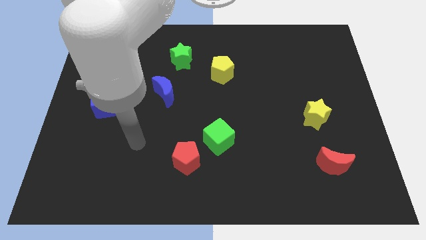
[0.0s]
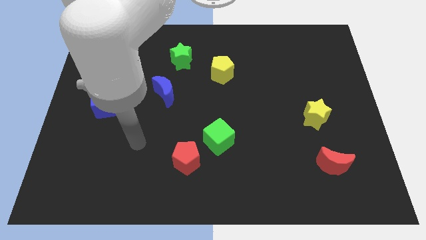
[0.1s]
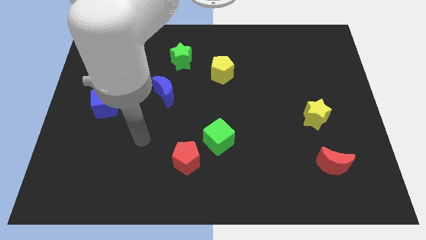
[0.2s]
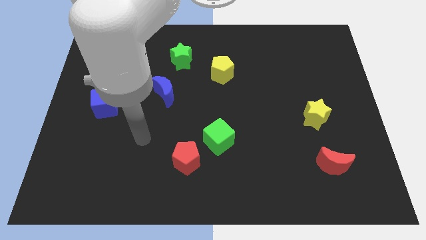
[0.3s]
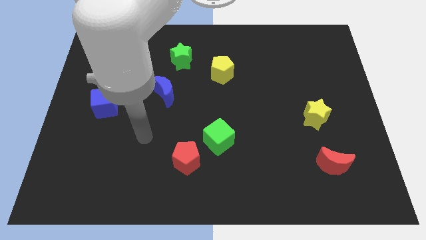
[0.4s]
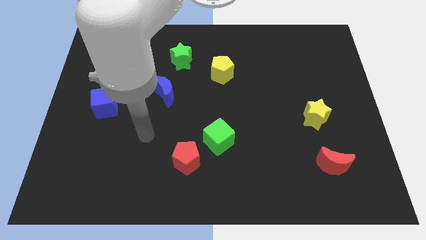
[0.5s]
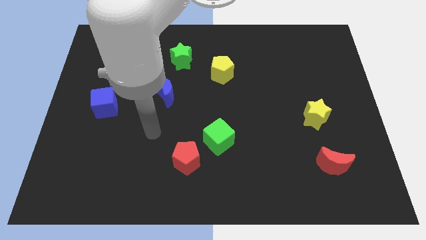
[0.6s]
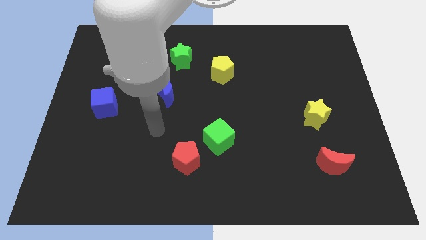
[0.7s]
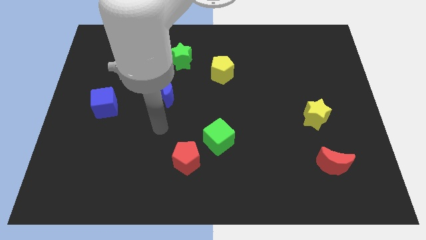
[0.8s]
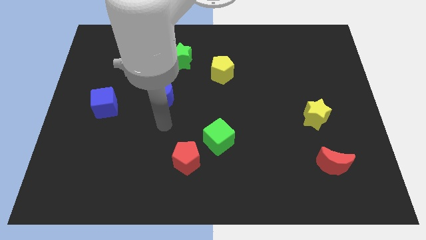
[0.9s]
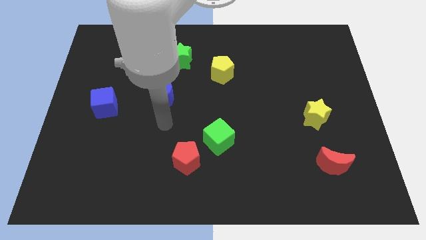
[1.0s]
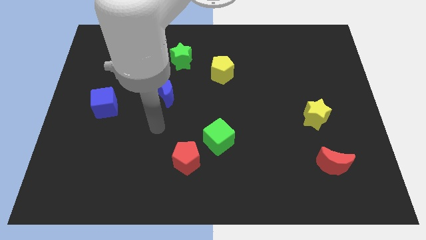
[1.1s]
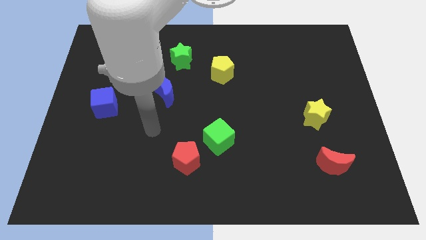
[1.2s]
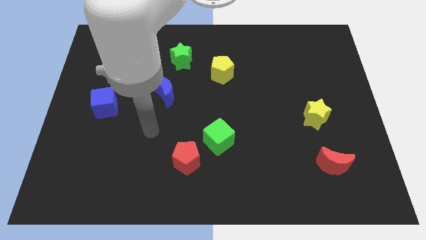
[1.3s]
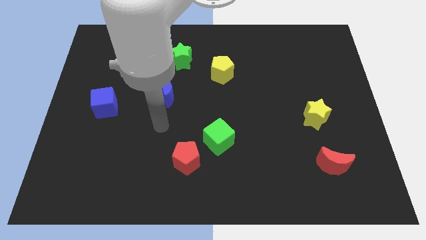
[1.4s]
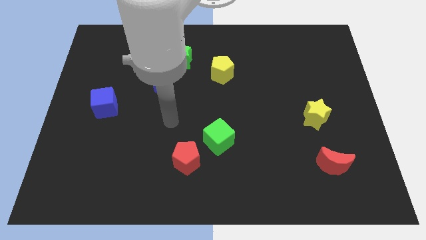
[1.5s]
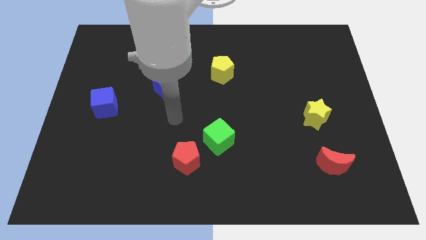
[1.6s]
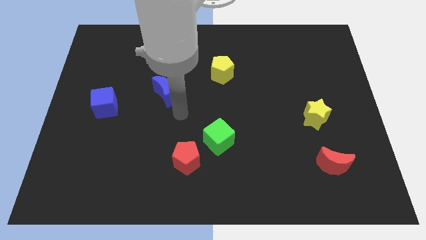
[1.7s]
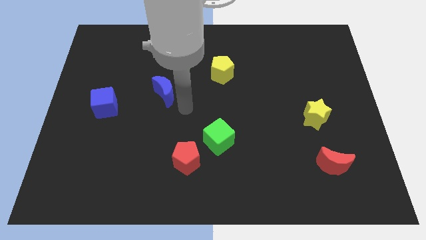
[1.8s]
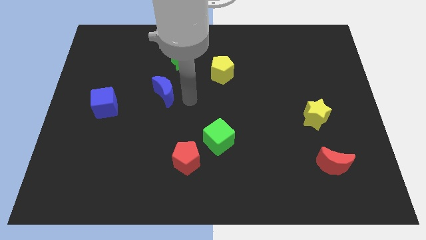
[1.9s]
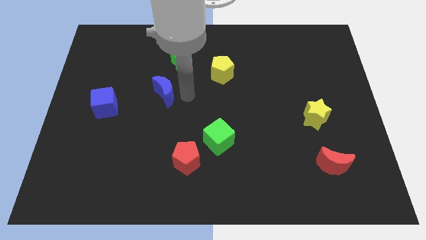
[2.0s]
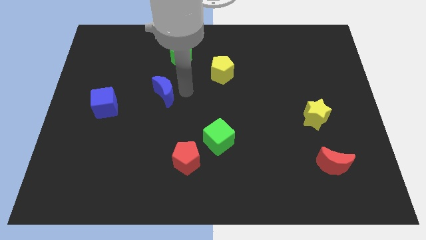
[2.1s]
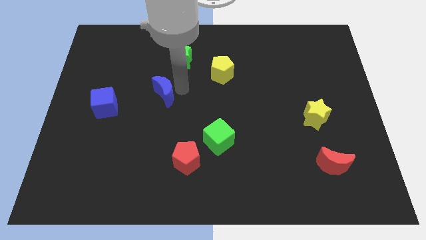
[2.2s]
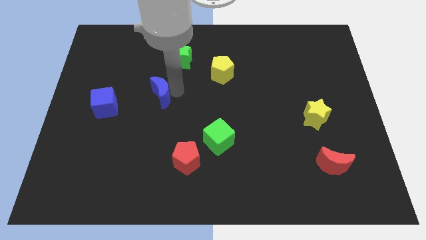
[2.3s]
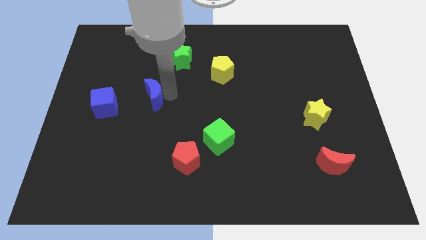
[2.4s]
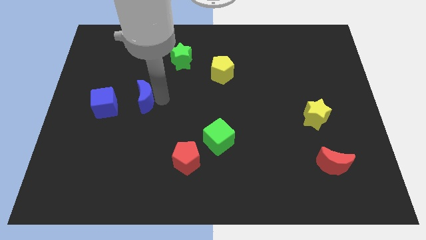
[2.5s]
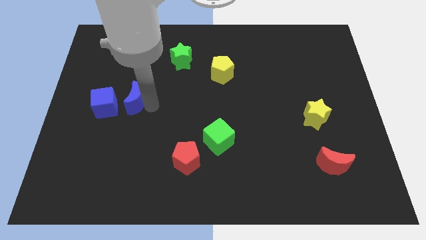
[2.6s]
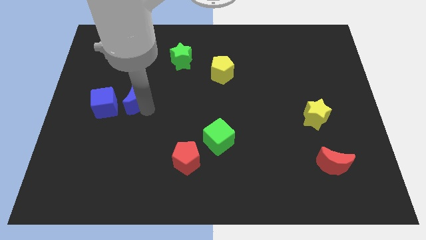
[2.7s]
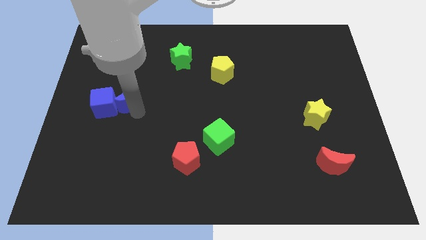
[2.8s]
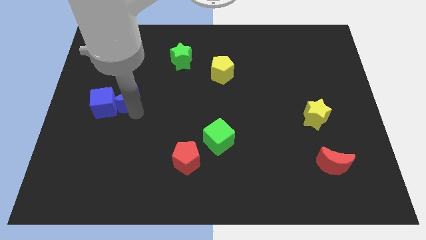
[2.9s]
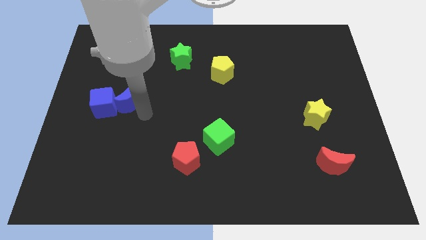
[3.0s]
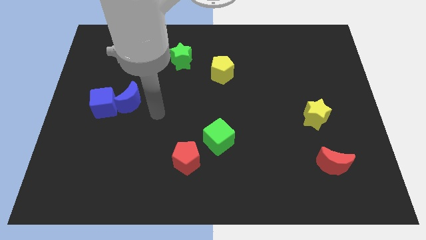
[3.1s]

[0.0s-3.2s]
push the blue crescent into the blue cube

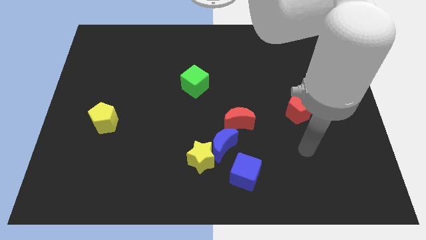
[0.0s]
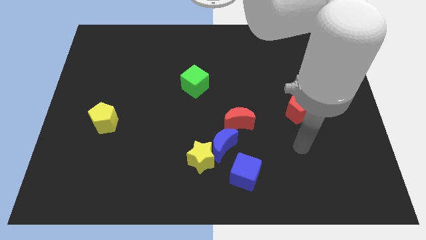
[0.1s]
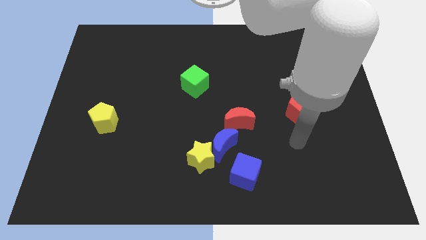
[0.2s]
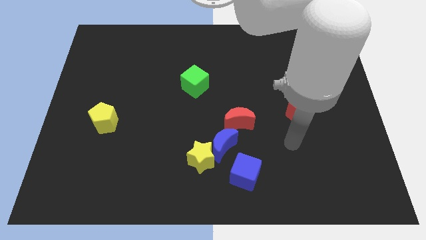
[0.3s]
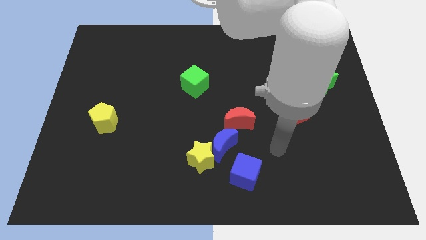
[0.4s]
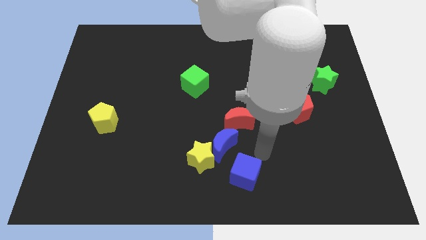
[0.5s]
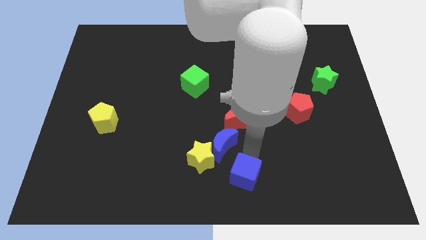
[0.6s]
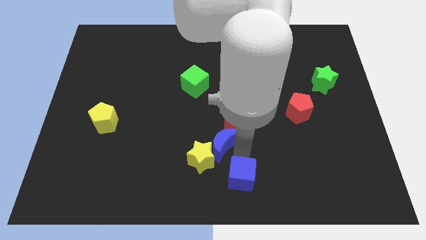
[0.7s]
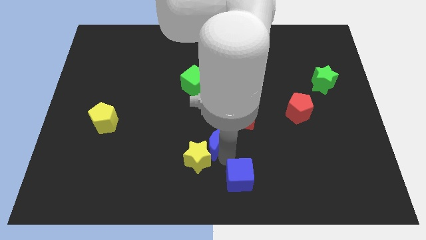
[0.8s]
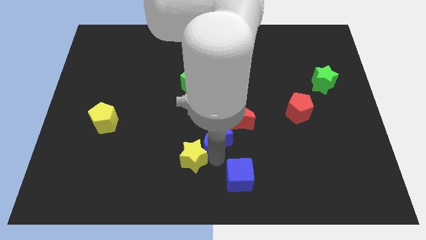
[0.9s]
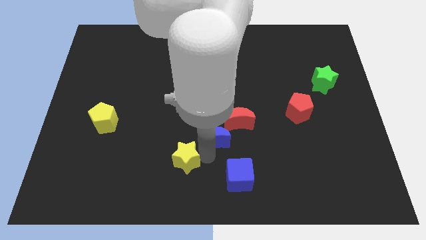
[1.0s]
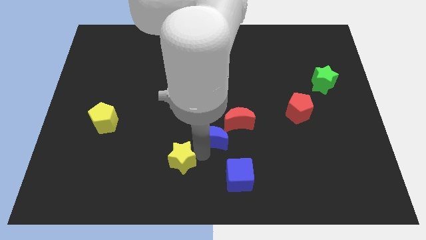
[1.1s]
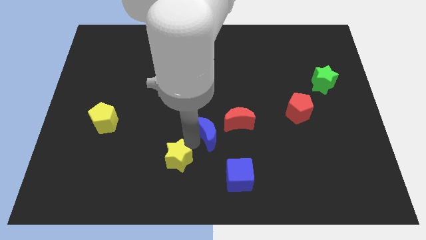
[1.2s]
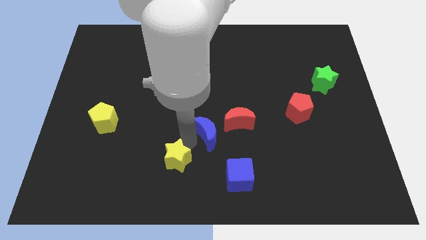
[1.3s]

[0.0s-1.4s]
separate the blue crescent and yellow star

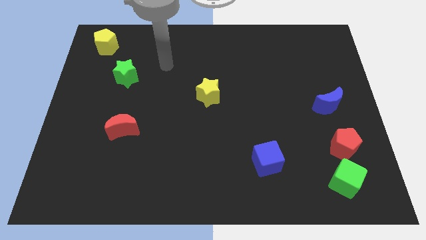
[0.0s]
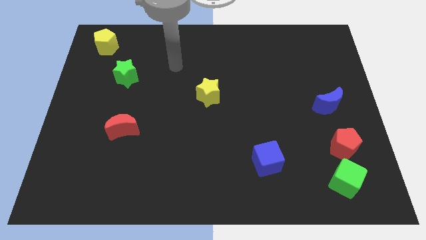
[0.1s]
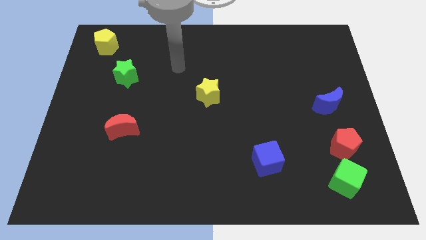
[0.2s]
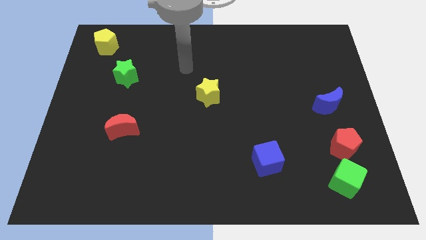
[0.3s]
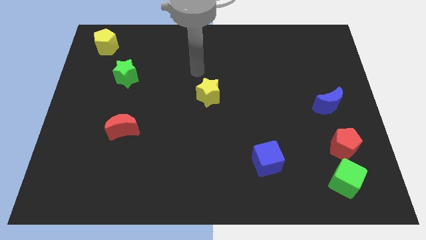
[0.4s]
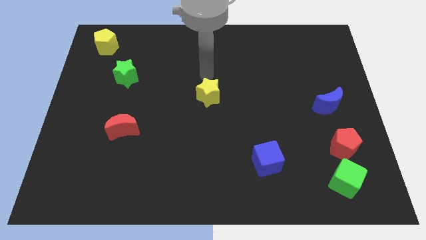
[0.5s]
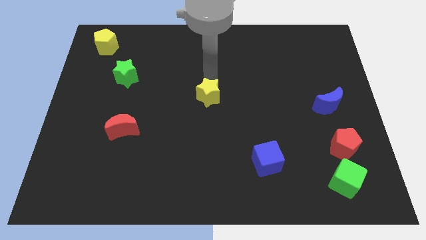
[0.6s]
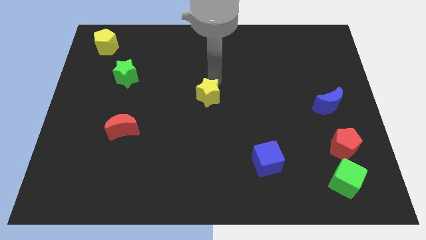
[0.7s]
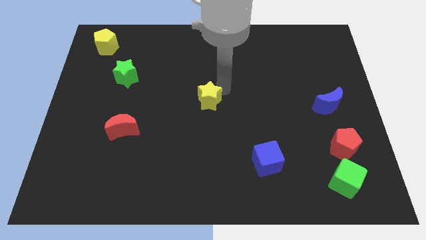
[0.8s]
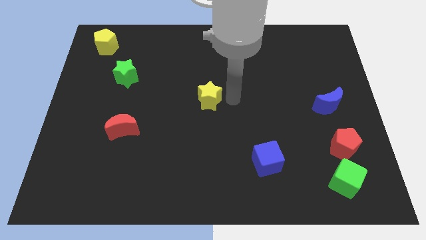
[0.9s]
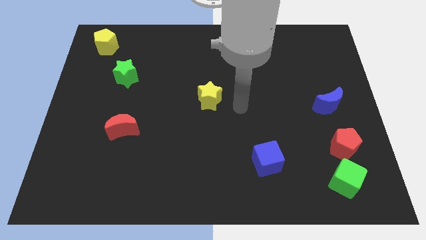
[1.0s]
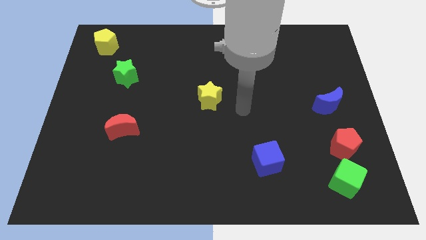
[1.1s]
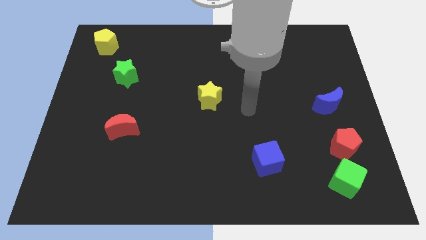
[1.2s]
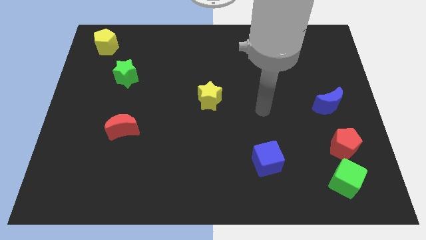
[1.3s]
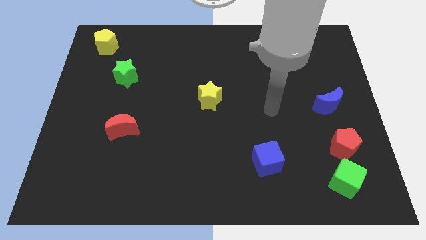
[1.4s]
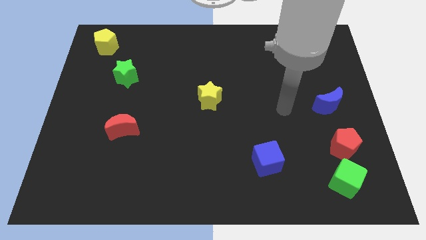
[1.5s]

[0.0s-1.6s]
slightly push the yellow star towards the center of the board

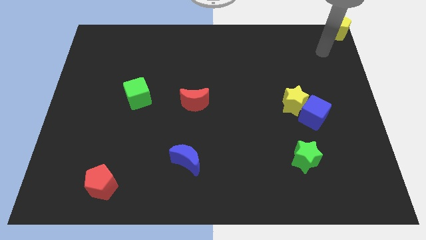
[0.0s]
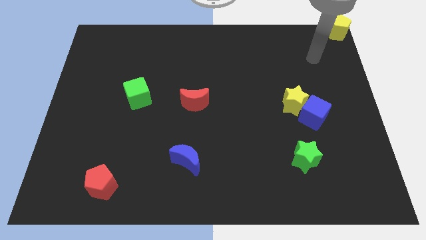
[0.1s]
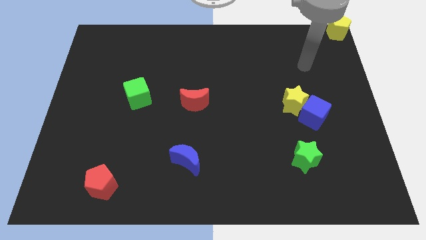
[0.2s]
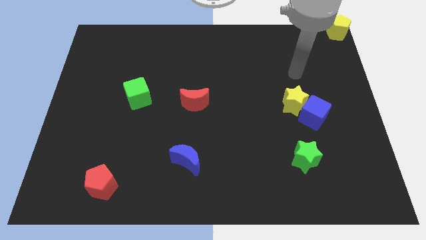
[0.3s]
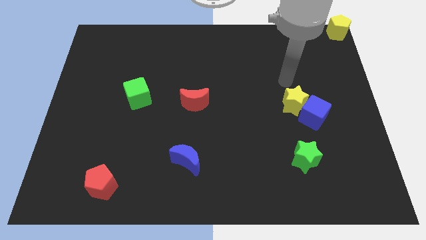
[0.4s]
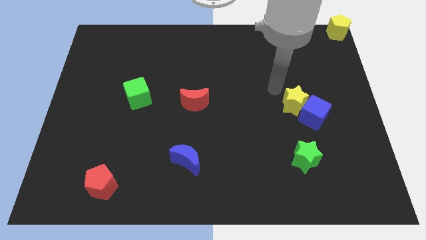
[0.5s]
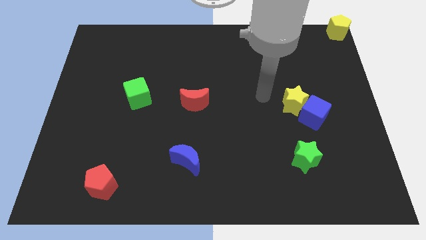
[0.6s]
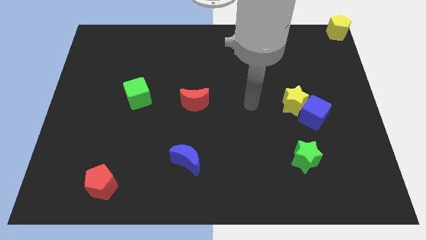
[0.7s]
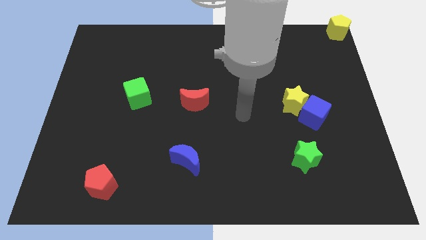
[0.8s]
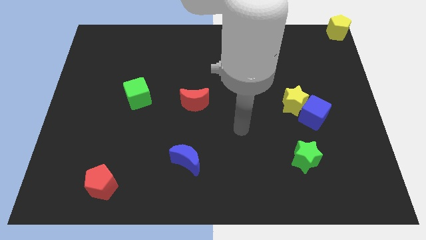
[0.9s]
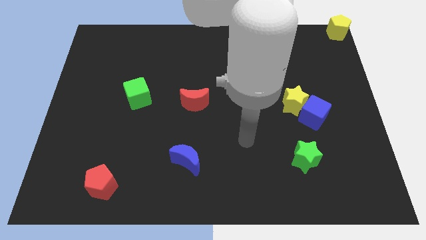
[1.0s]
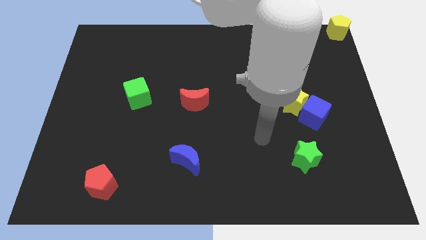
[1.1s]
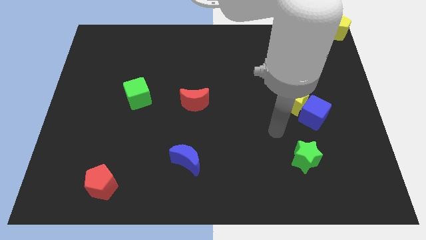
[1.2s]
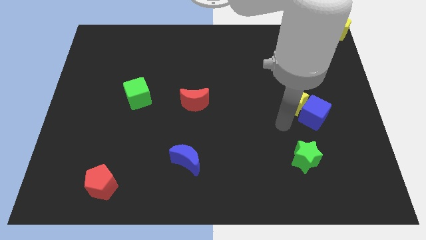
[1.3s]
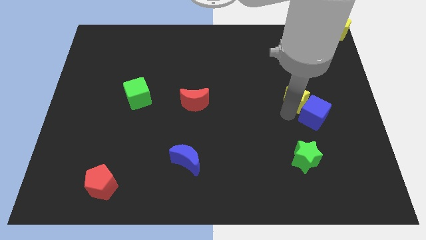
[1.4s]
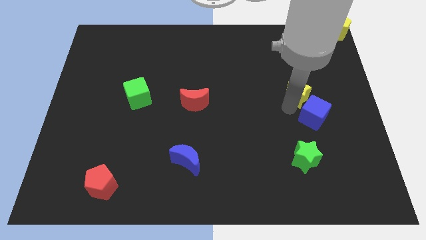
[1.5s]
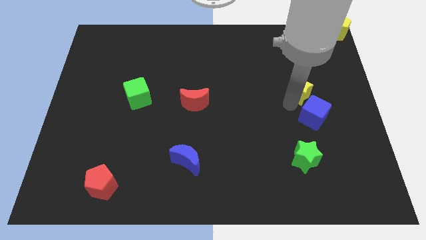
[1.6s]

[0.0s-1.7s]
move your arm to the bottom of the yellow star

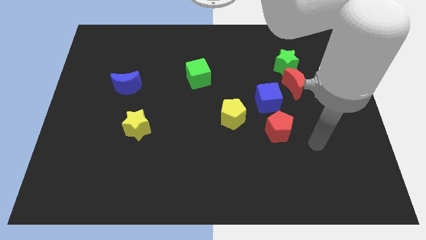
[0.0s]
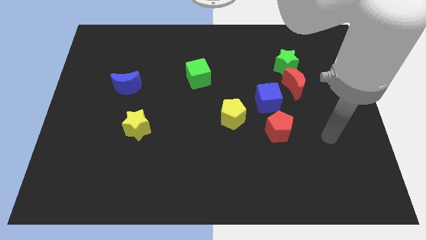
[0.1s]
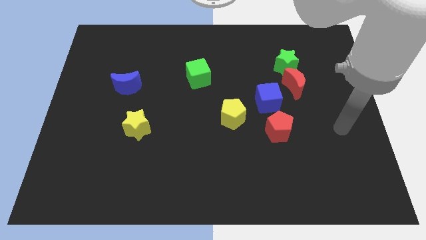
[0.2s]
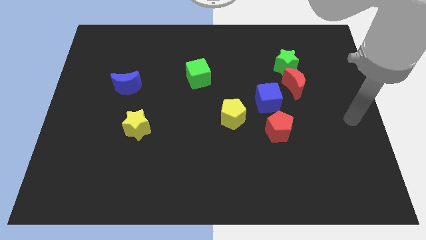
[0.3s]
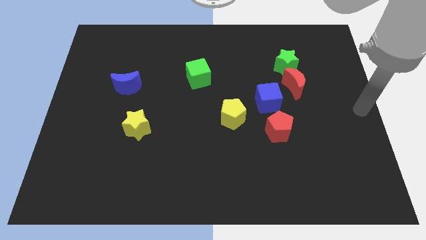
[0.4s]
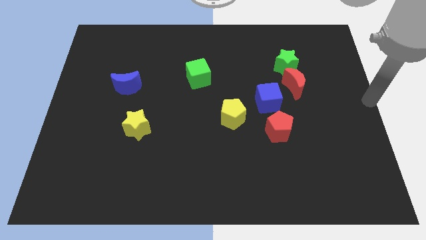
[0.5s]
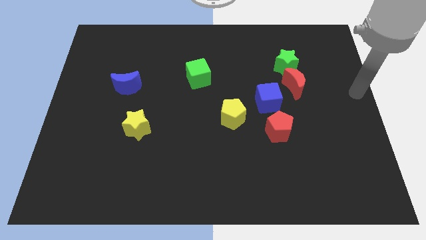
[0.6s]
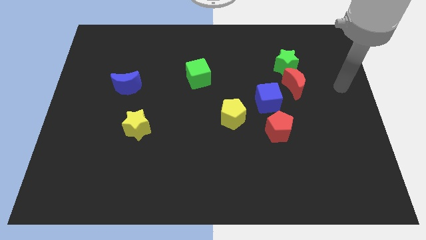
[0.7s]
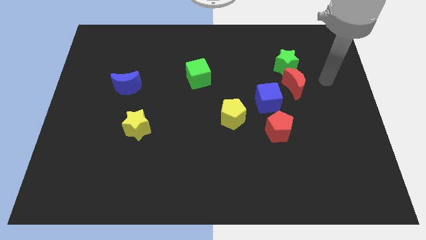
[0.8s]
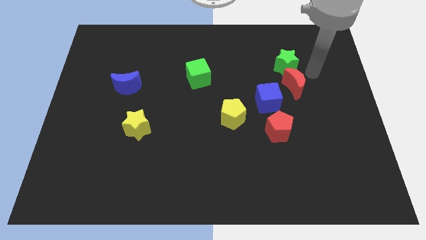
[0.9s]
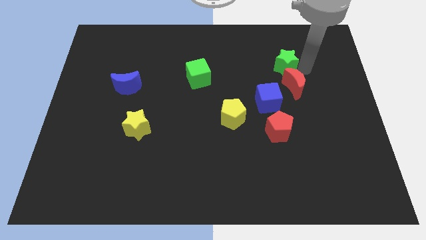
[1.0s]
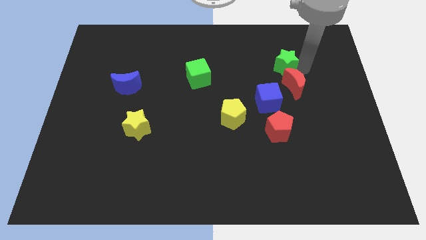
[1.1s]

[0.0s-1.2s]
move your arm to the right of the green star

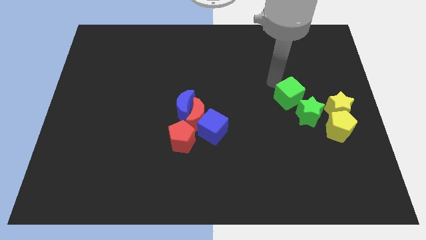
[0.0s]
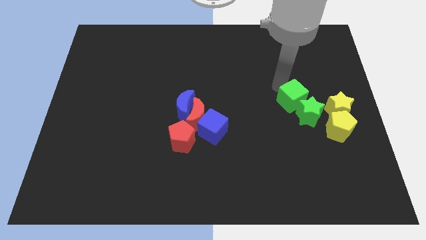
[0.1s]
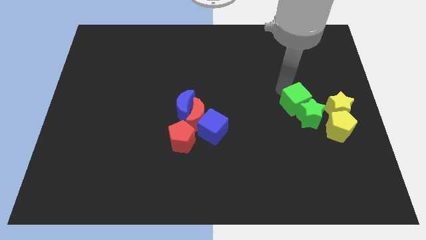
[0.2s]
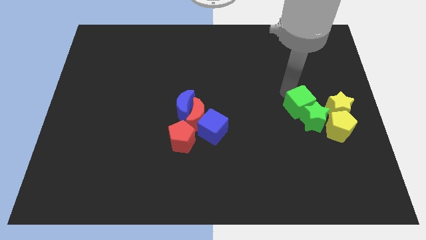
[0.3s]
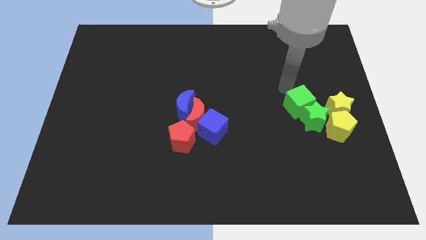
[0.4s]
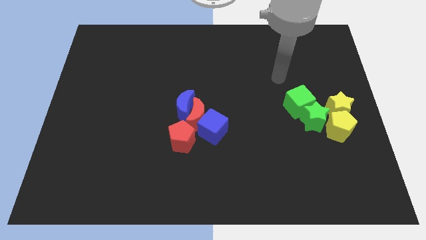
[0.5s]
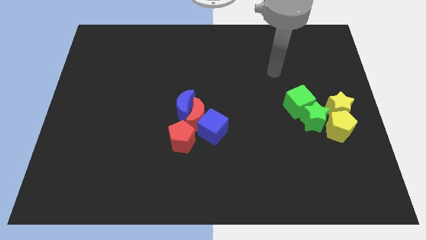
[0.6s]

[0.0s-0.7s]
push the green cube into the green star
